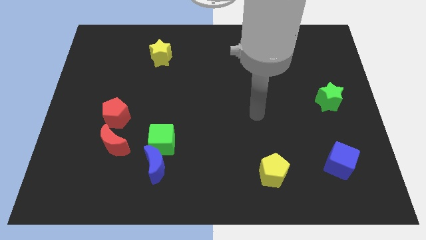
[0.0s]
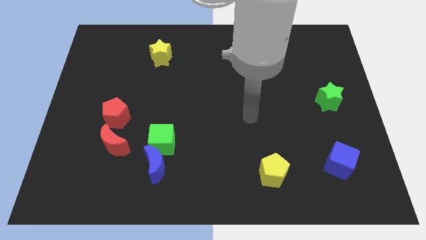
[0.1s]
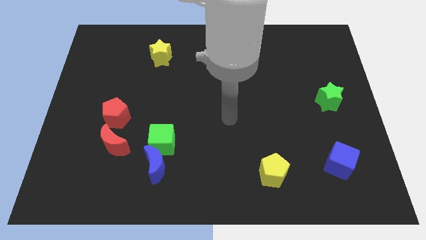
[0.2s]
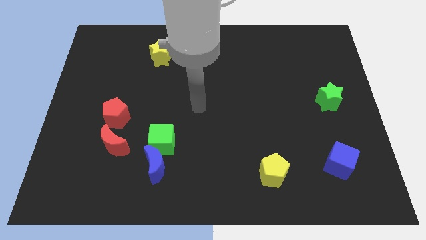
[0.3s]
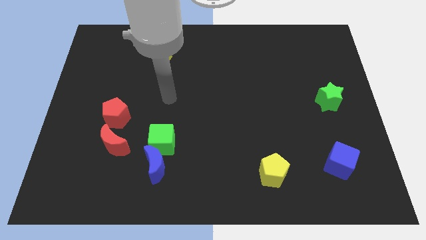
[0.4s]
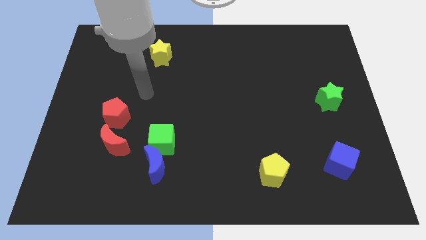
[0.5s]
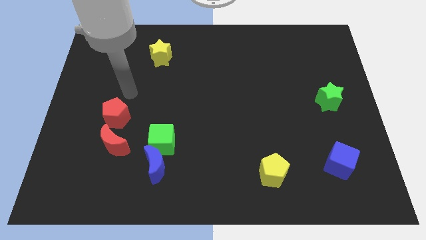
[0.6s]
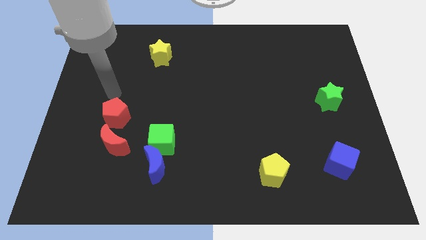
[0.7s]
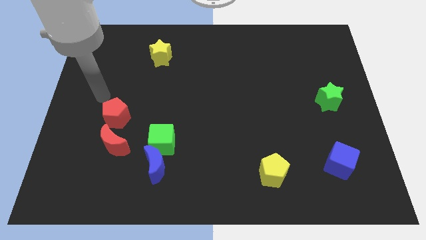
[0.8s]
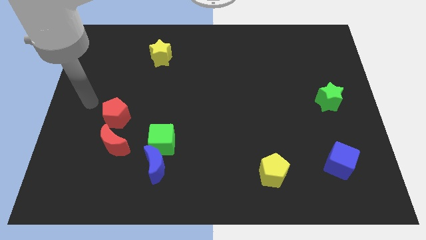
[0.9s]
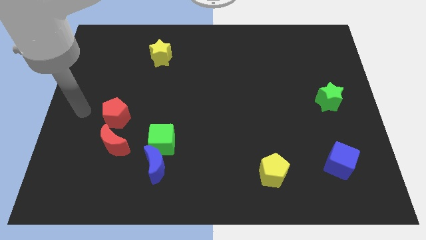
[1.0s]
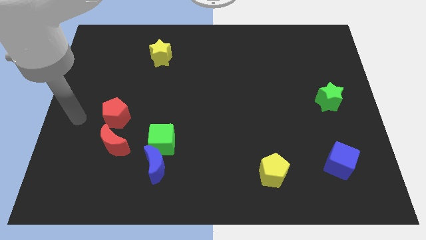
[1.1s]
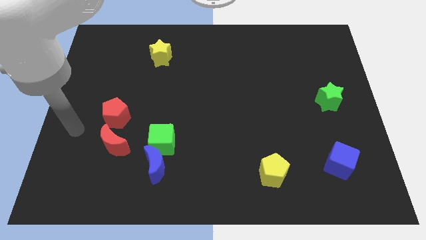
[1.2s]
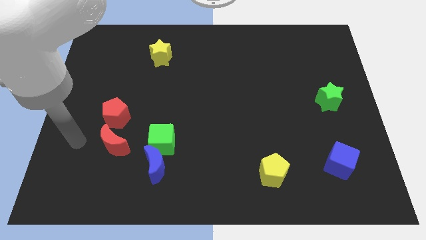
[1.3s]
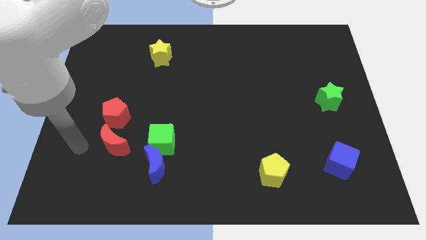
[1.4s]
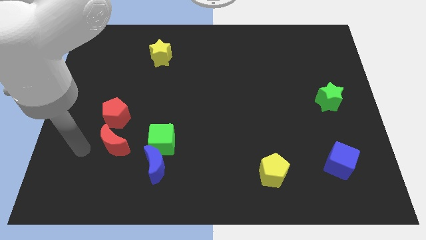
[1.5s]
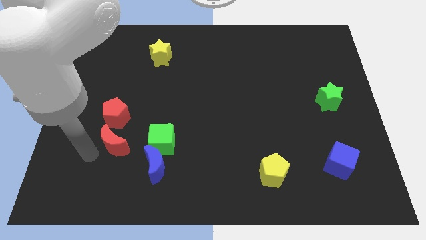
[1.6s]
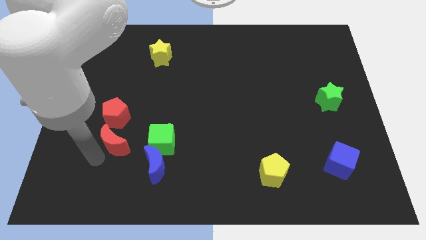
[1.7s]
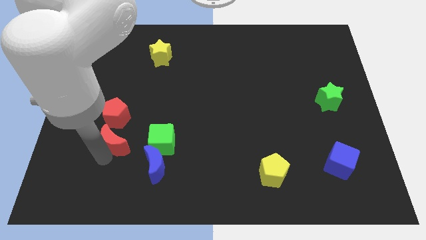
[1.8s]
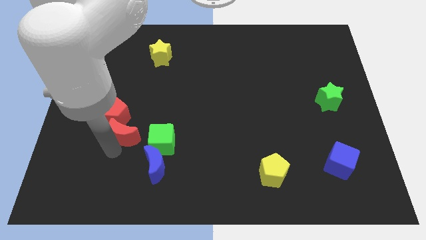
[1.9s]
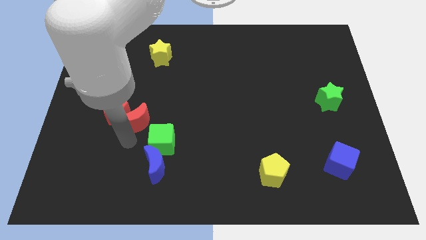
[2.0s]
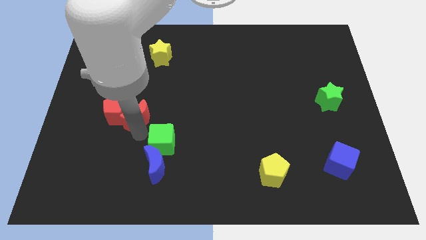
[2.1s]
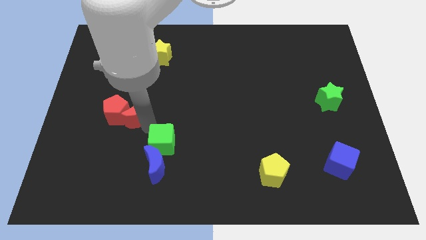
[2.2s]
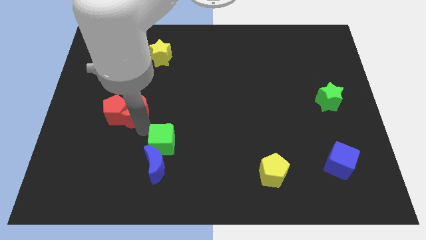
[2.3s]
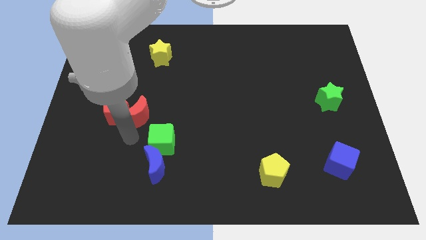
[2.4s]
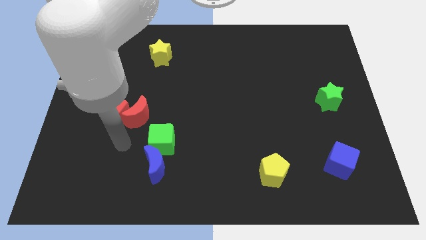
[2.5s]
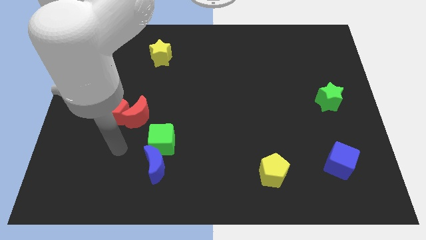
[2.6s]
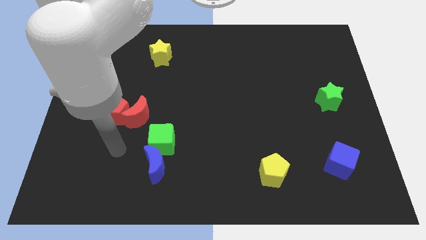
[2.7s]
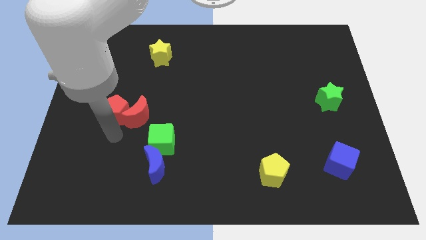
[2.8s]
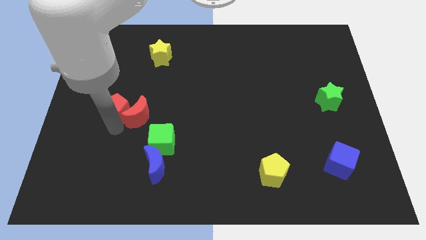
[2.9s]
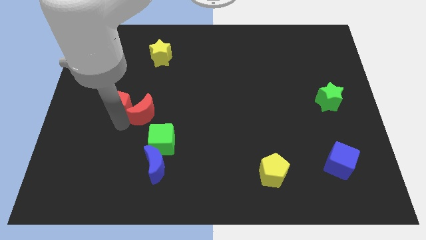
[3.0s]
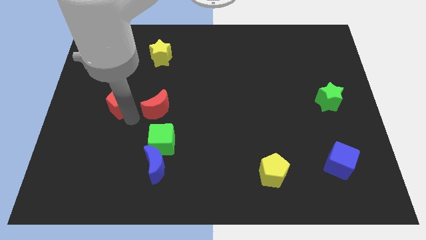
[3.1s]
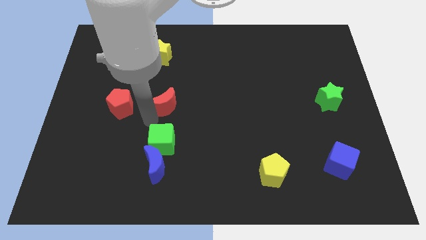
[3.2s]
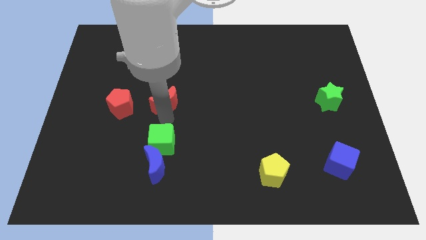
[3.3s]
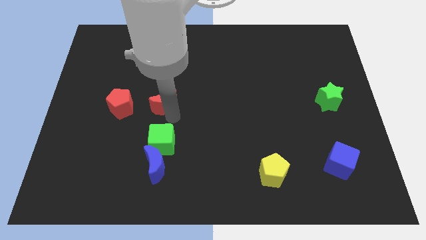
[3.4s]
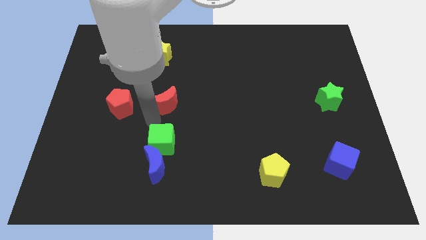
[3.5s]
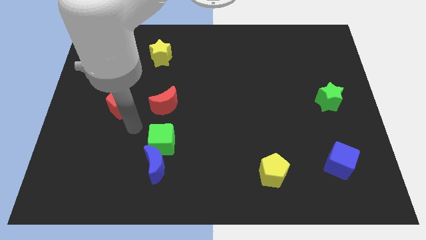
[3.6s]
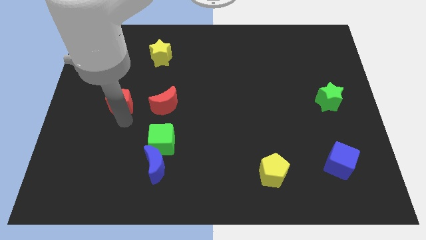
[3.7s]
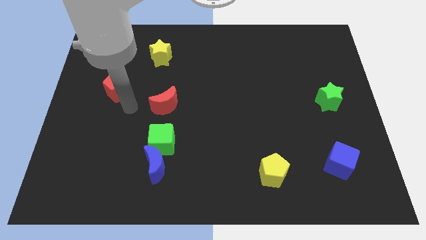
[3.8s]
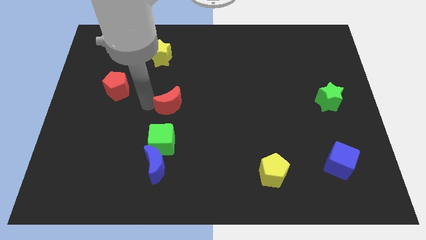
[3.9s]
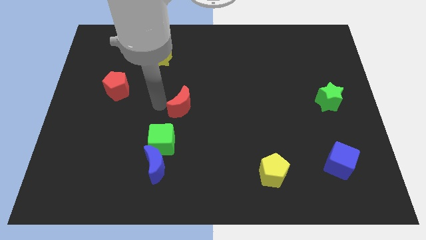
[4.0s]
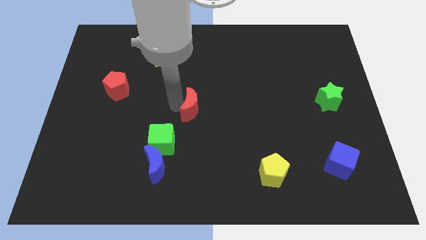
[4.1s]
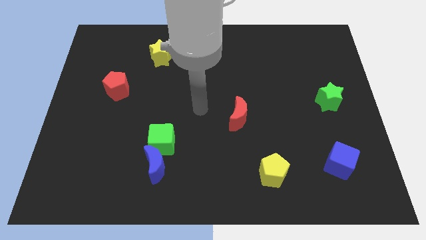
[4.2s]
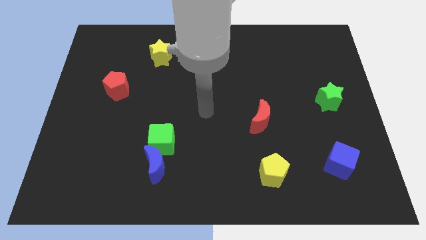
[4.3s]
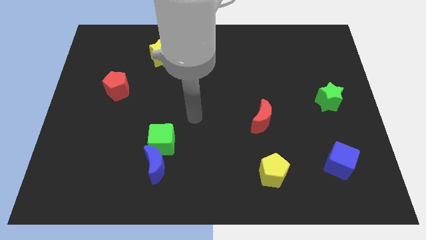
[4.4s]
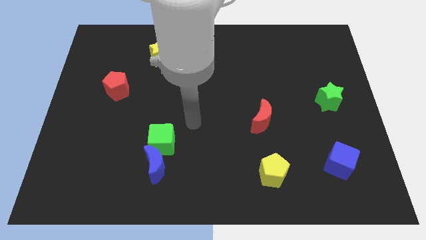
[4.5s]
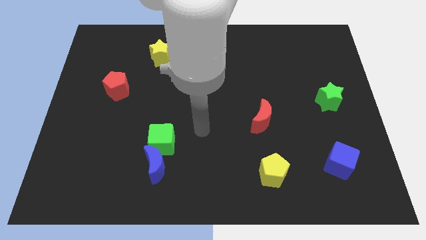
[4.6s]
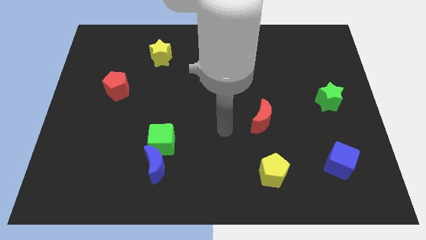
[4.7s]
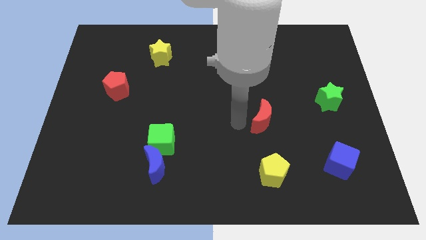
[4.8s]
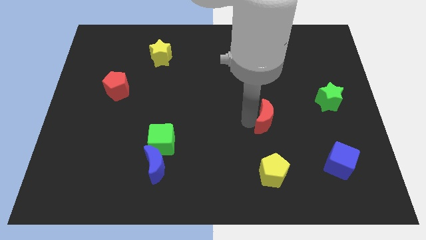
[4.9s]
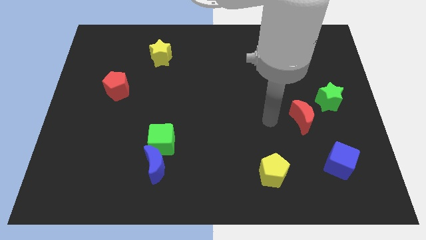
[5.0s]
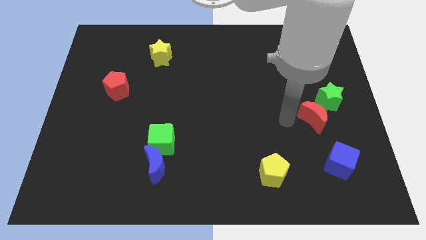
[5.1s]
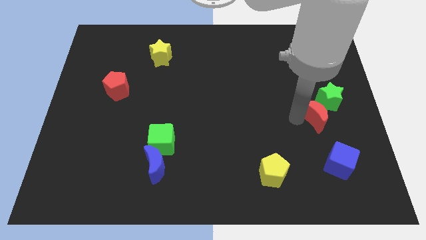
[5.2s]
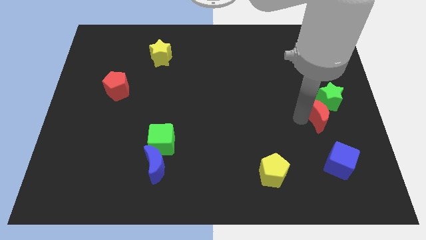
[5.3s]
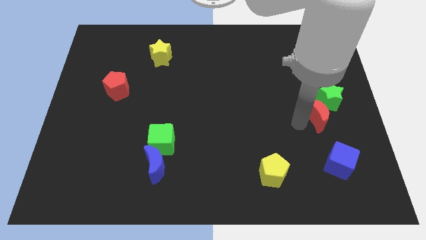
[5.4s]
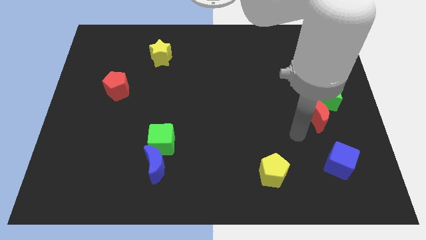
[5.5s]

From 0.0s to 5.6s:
move the red moon close to the green star

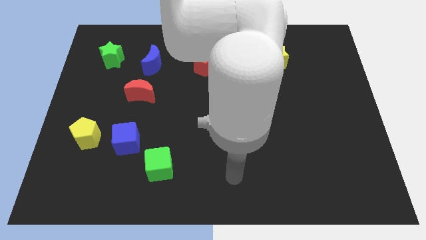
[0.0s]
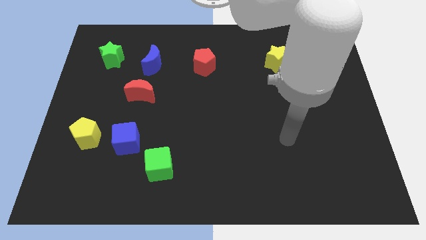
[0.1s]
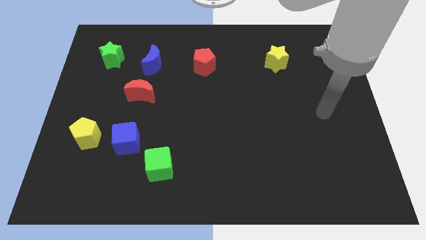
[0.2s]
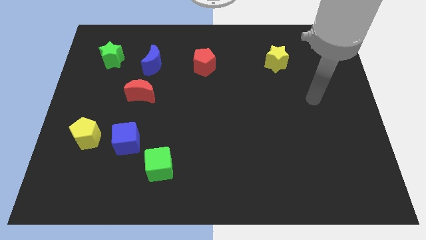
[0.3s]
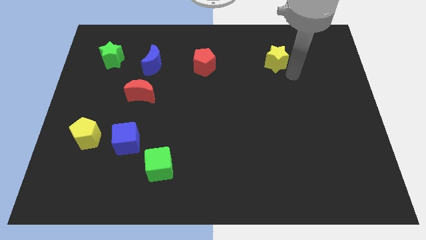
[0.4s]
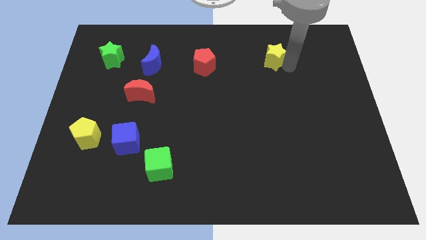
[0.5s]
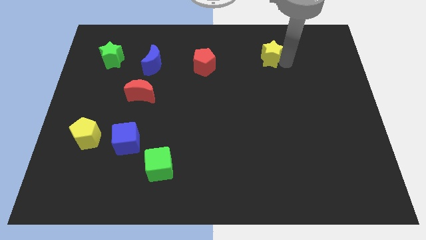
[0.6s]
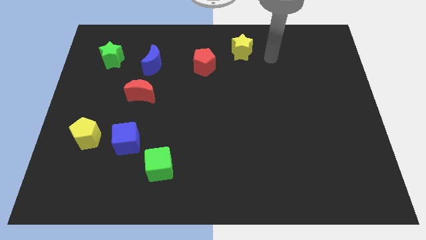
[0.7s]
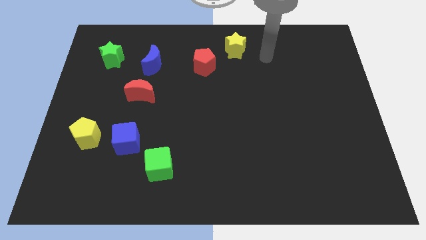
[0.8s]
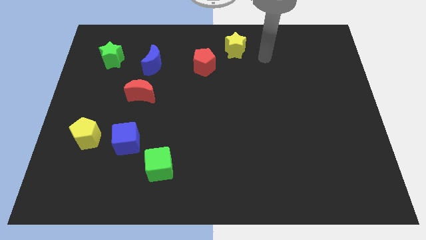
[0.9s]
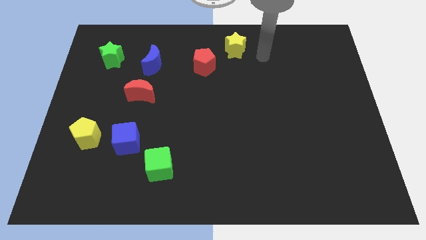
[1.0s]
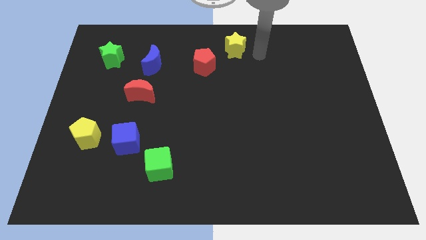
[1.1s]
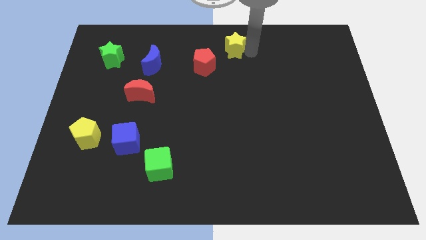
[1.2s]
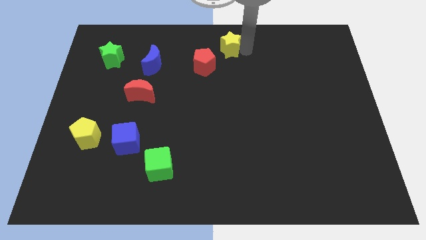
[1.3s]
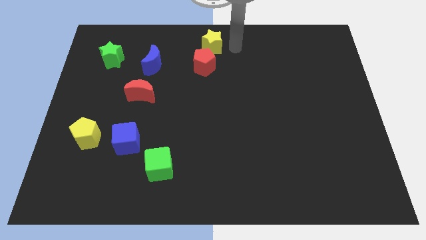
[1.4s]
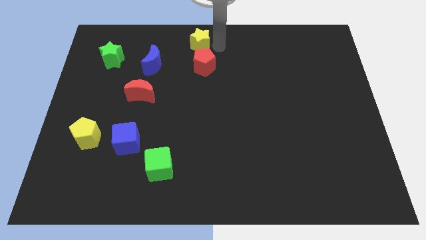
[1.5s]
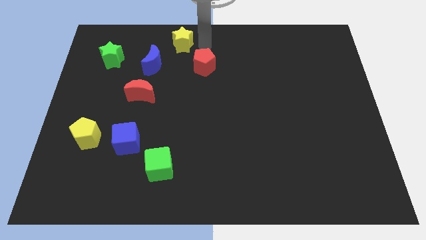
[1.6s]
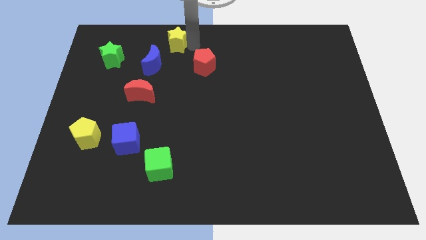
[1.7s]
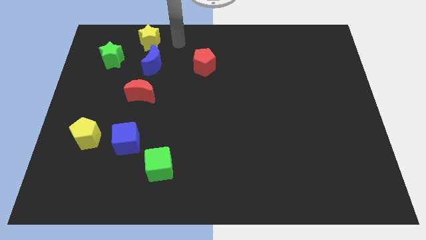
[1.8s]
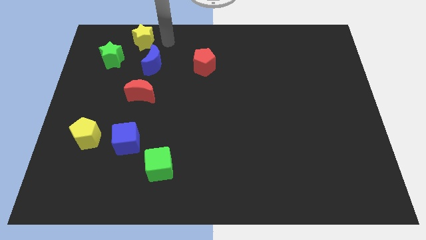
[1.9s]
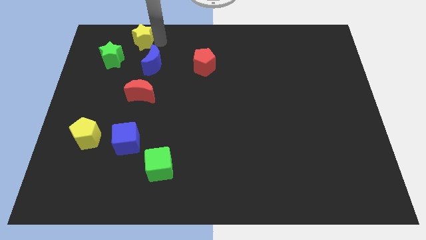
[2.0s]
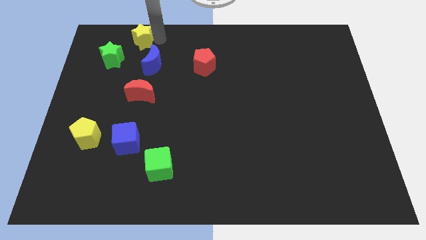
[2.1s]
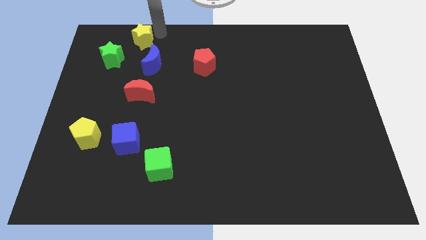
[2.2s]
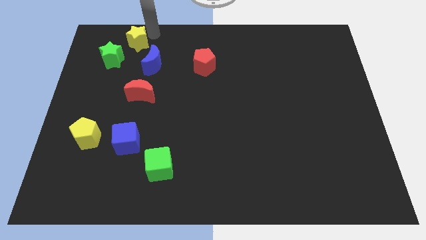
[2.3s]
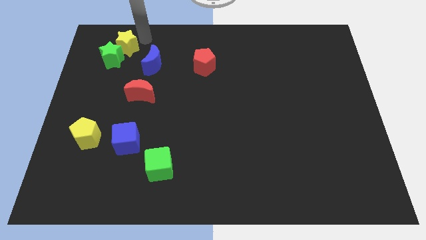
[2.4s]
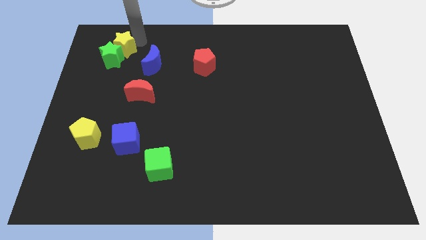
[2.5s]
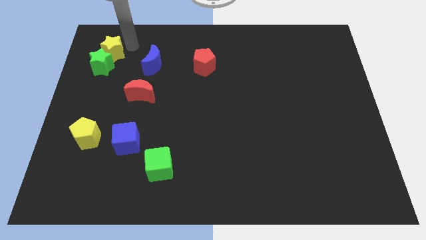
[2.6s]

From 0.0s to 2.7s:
push the yellow star to the green star

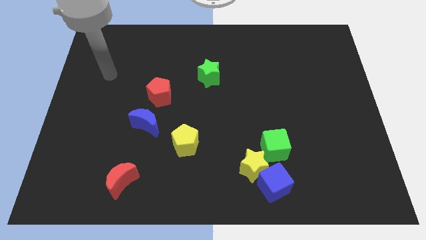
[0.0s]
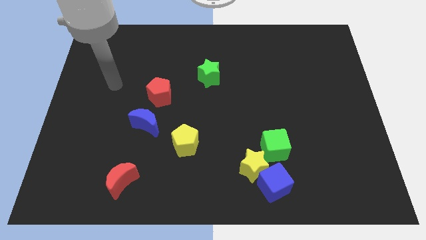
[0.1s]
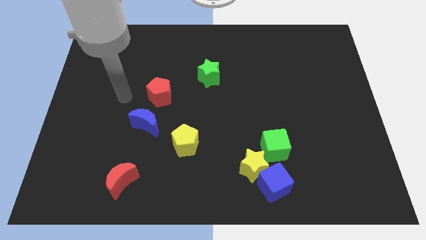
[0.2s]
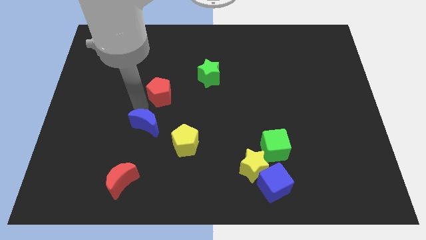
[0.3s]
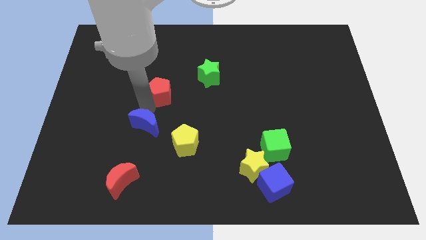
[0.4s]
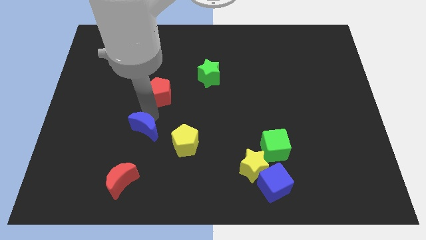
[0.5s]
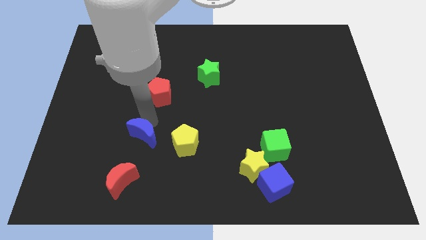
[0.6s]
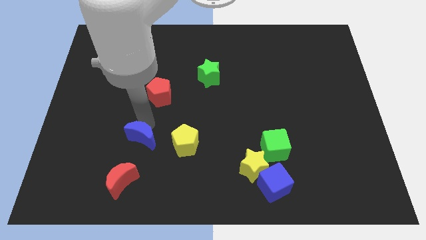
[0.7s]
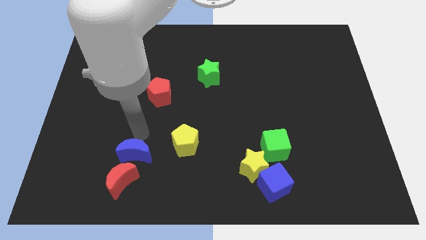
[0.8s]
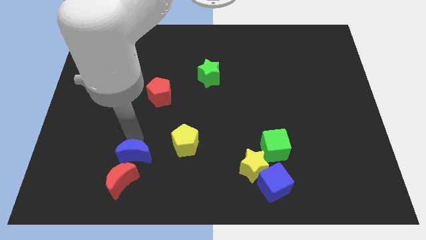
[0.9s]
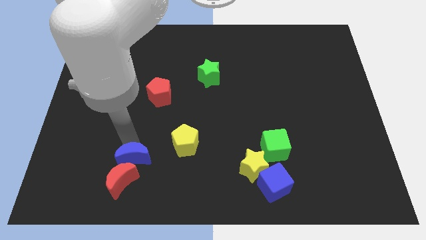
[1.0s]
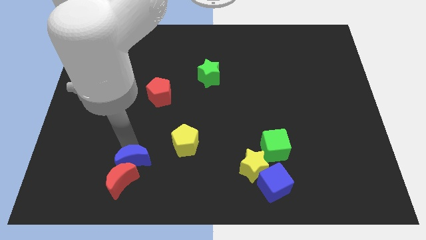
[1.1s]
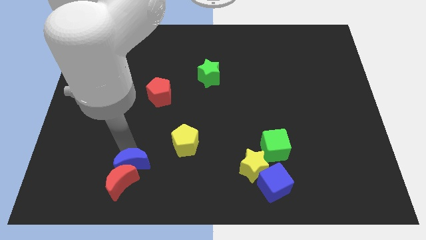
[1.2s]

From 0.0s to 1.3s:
push the blue moon towards the red moon
